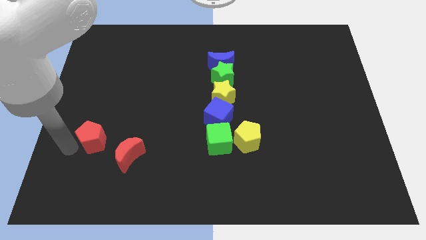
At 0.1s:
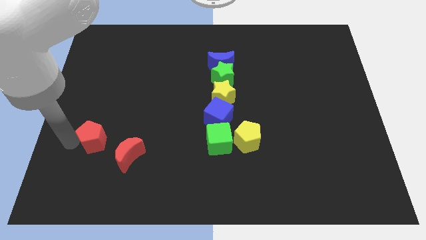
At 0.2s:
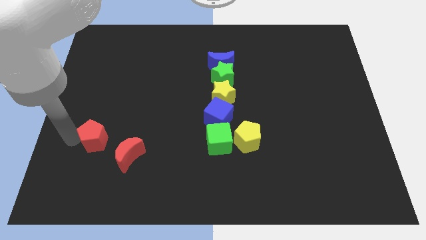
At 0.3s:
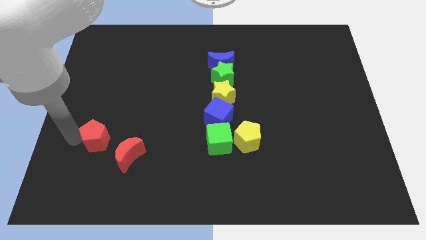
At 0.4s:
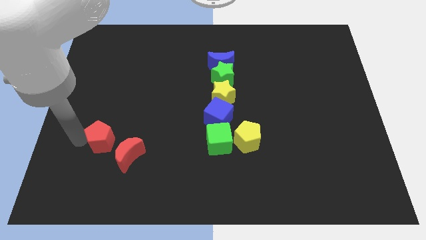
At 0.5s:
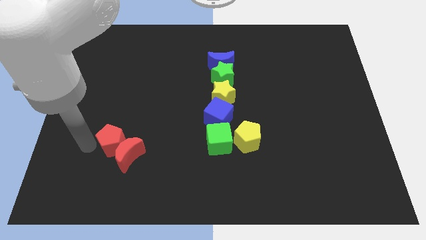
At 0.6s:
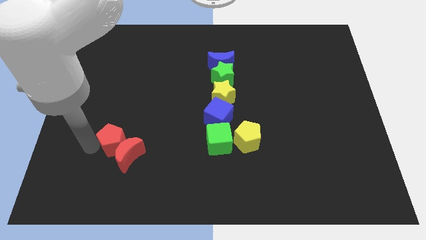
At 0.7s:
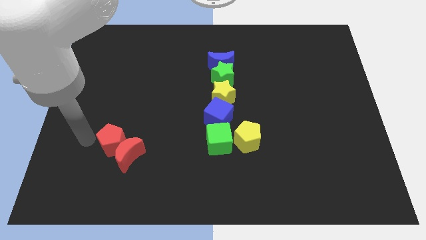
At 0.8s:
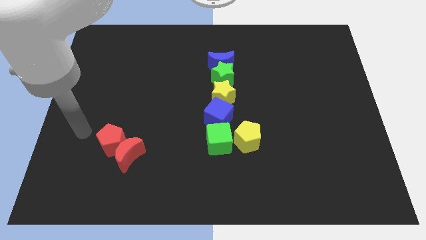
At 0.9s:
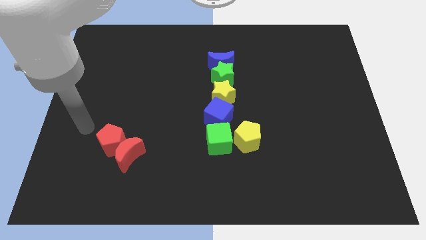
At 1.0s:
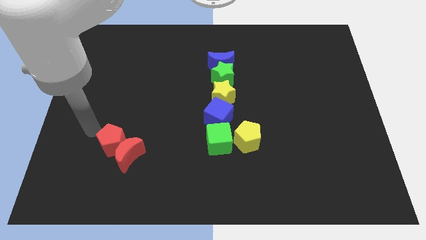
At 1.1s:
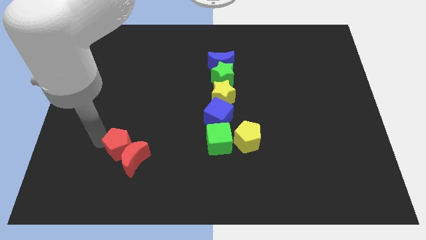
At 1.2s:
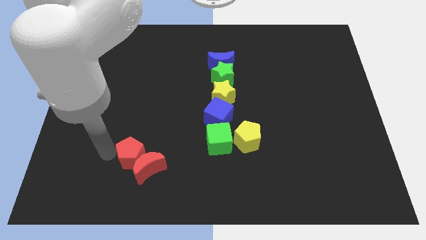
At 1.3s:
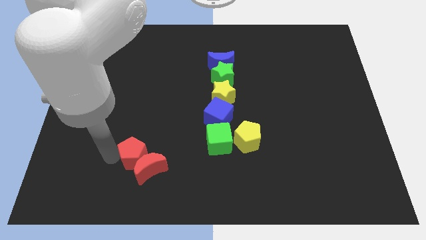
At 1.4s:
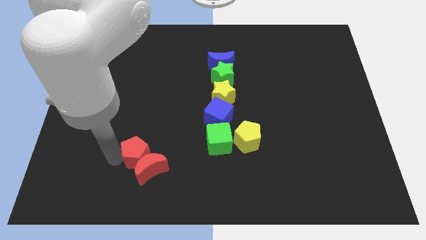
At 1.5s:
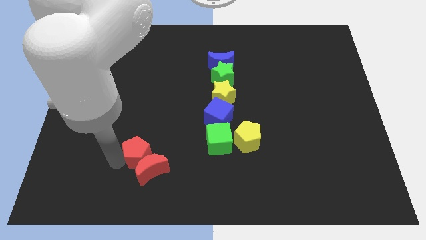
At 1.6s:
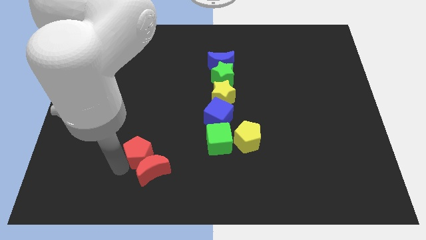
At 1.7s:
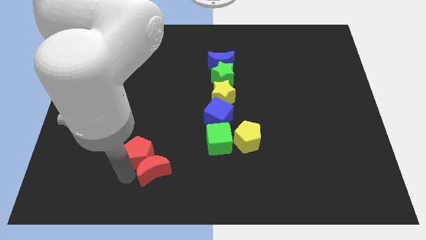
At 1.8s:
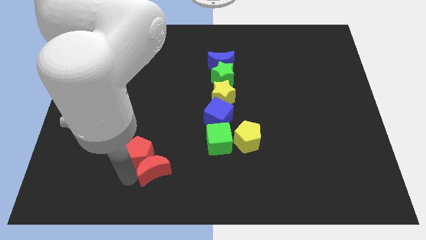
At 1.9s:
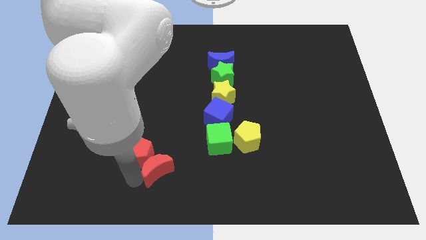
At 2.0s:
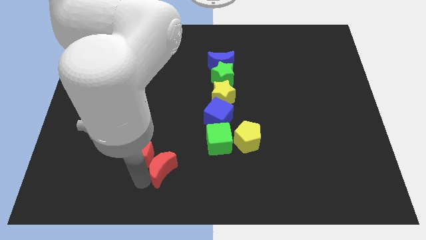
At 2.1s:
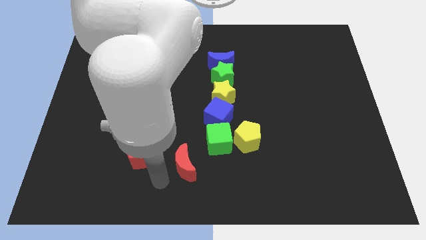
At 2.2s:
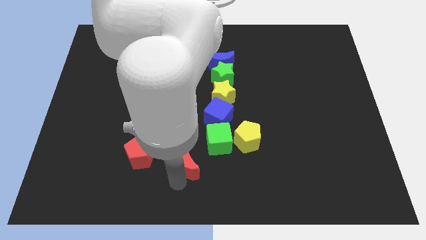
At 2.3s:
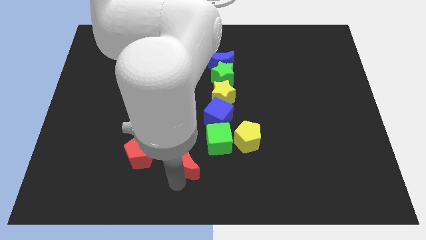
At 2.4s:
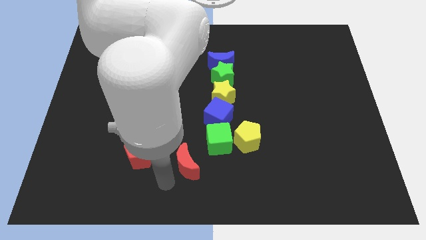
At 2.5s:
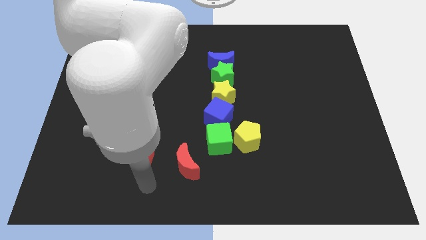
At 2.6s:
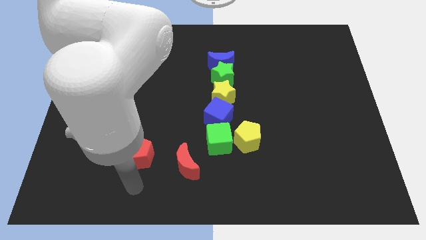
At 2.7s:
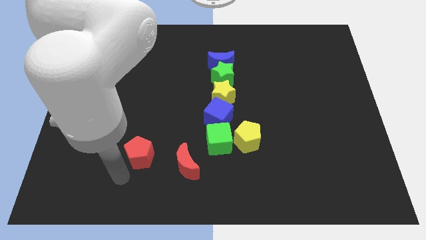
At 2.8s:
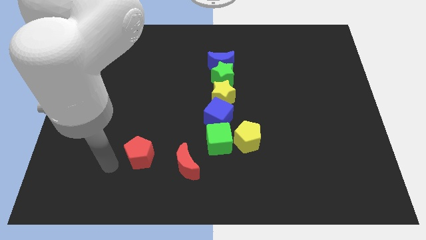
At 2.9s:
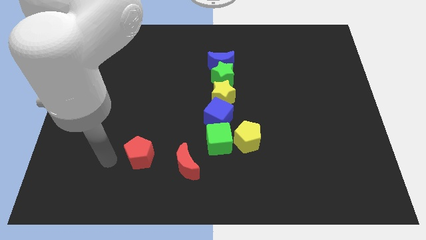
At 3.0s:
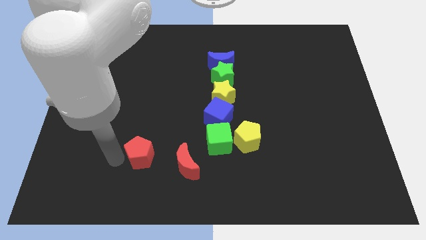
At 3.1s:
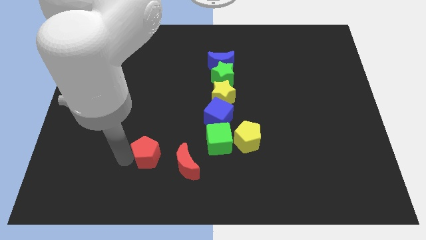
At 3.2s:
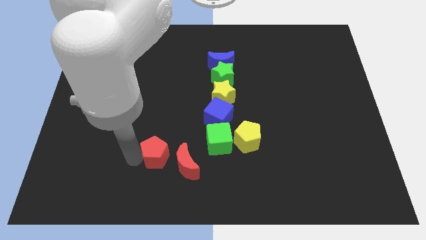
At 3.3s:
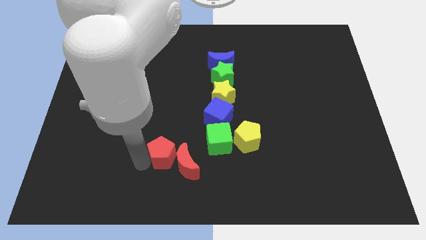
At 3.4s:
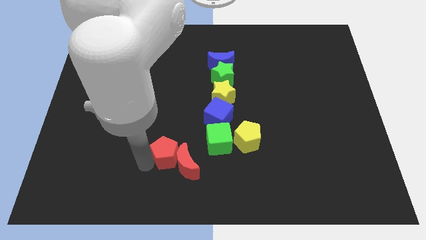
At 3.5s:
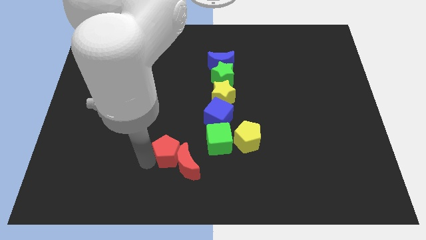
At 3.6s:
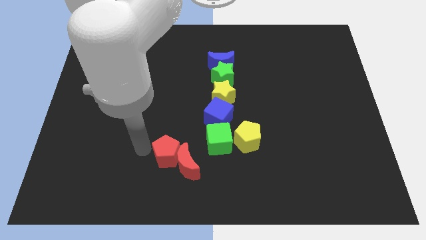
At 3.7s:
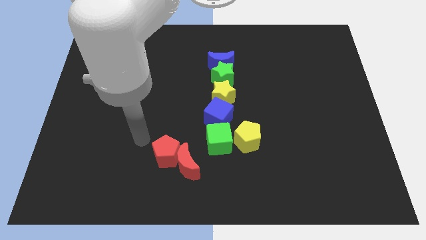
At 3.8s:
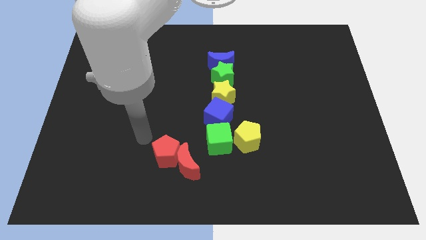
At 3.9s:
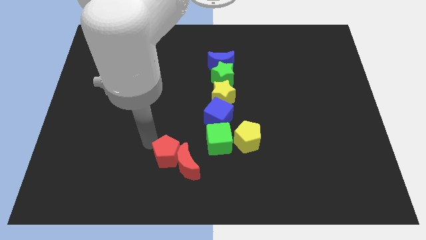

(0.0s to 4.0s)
push the red pentagon close to red crescent

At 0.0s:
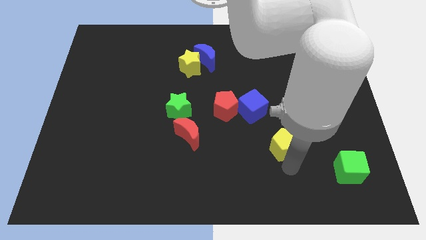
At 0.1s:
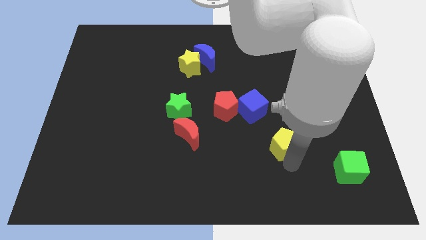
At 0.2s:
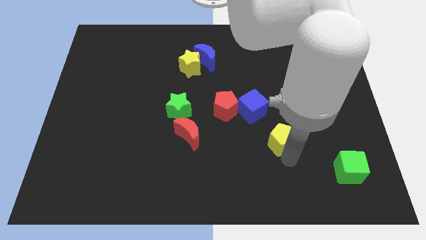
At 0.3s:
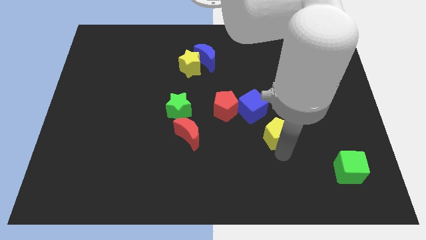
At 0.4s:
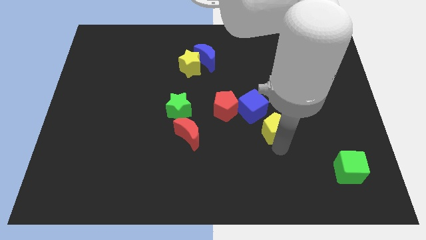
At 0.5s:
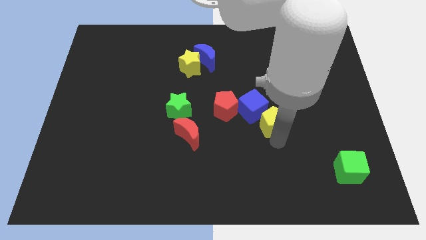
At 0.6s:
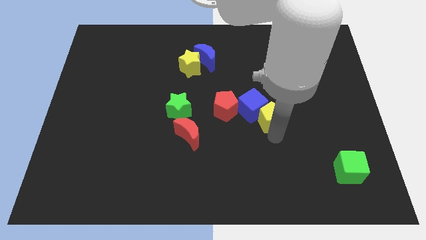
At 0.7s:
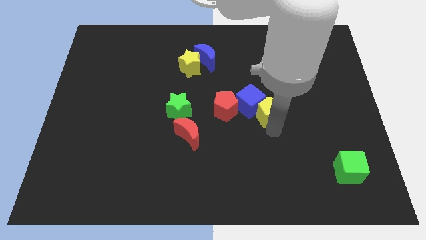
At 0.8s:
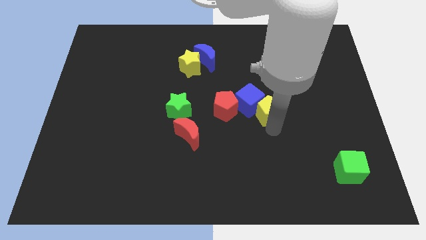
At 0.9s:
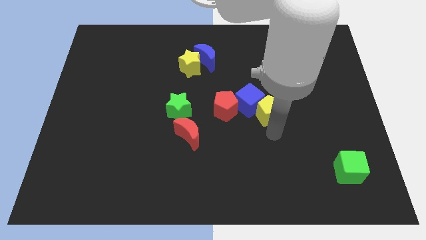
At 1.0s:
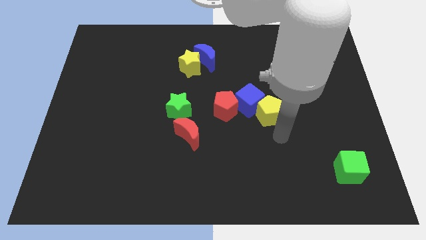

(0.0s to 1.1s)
push the blue cube with the blue cube

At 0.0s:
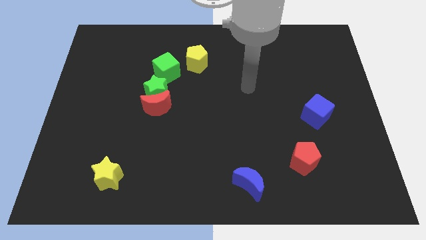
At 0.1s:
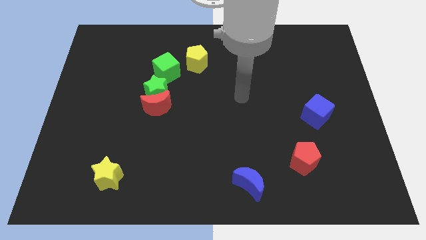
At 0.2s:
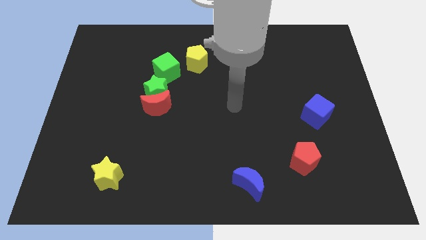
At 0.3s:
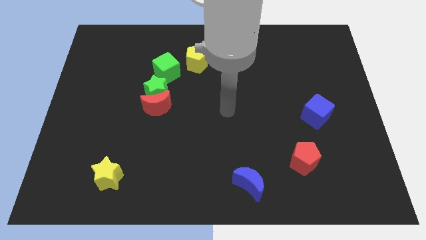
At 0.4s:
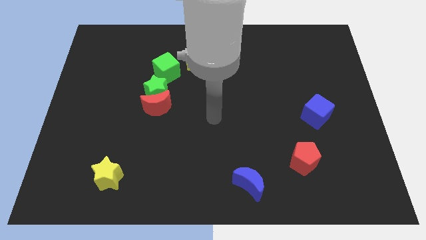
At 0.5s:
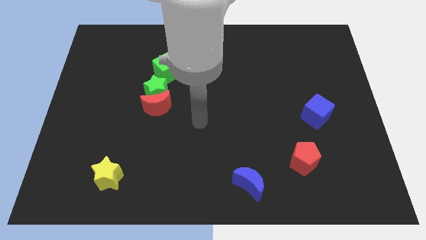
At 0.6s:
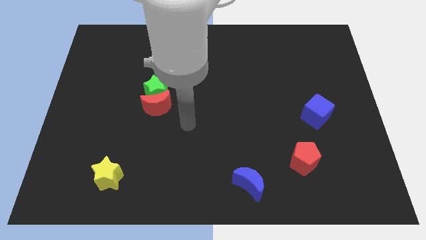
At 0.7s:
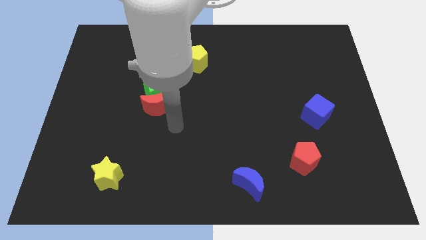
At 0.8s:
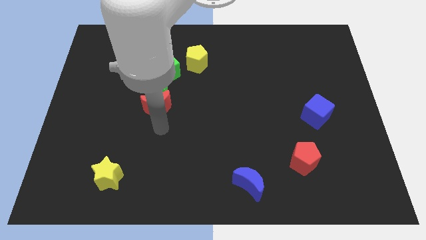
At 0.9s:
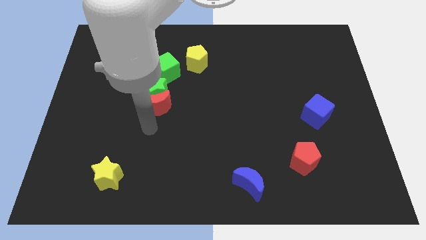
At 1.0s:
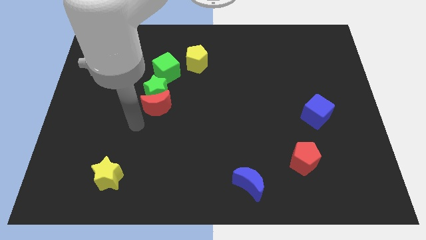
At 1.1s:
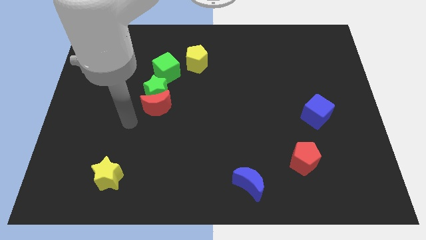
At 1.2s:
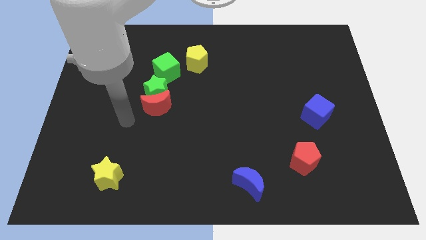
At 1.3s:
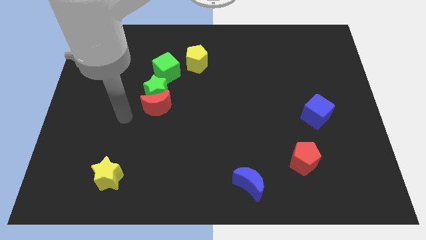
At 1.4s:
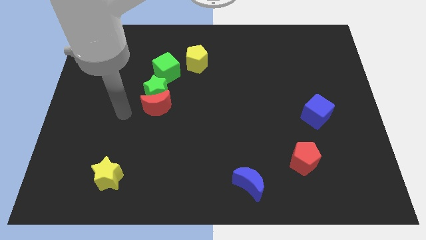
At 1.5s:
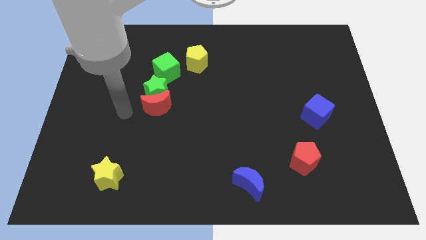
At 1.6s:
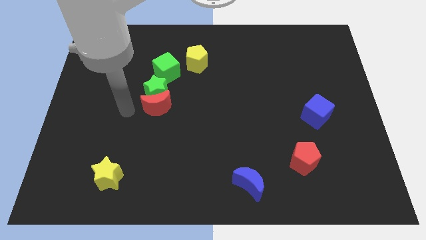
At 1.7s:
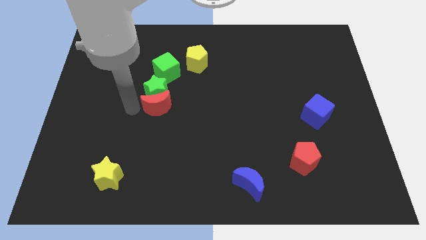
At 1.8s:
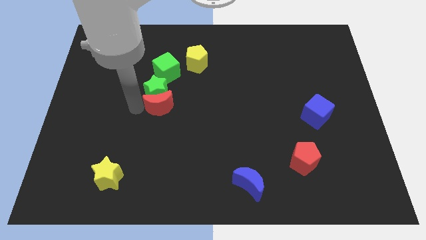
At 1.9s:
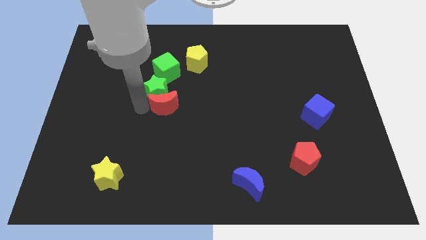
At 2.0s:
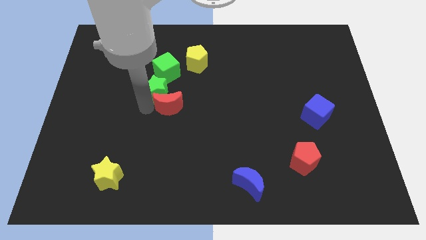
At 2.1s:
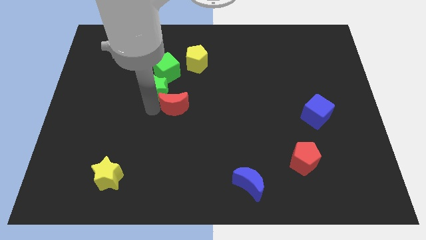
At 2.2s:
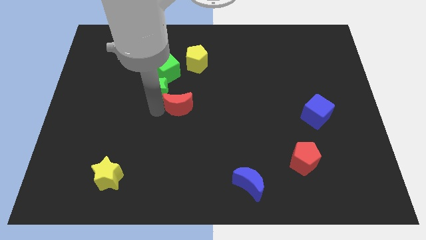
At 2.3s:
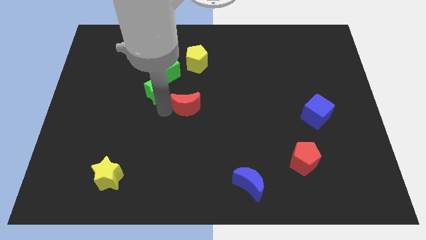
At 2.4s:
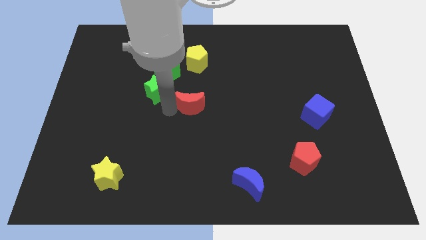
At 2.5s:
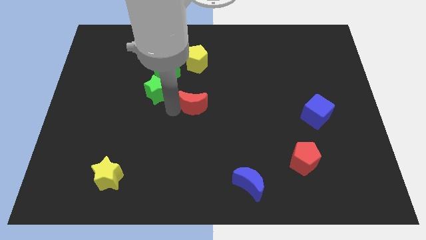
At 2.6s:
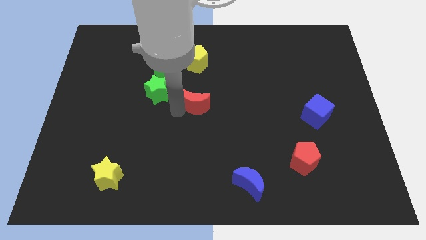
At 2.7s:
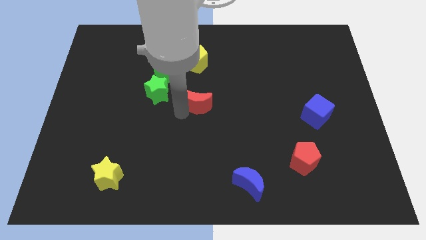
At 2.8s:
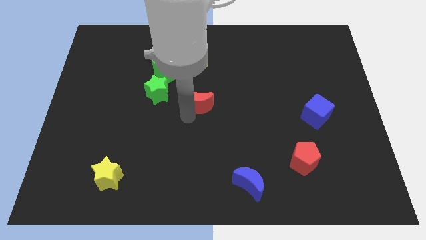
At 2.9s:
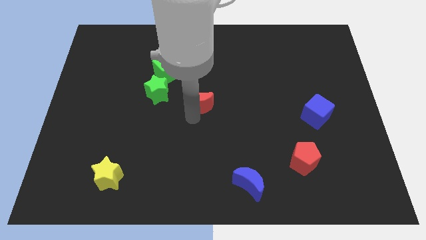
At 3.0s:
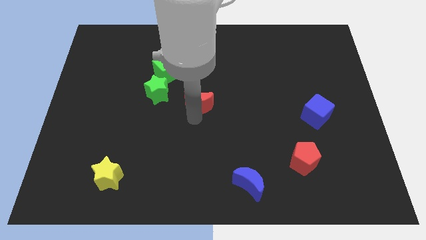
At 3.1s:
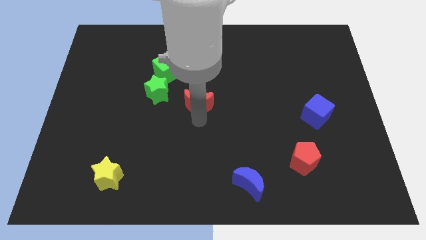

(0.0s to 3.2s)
push the red moon to the center of the board

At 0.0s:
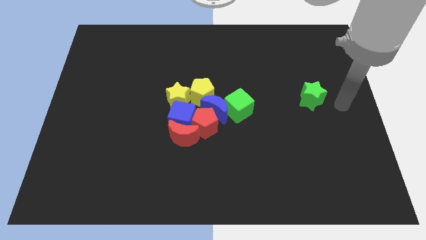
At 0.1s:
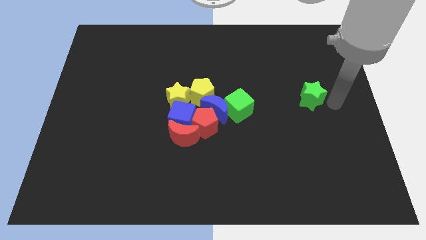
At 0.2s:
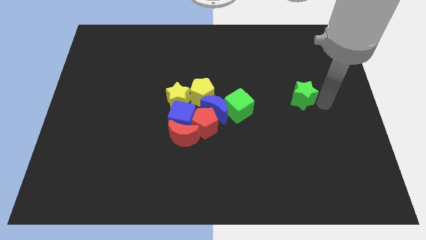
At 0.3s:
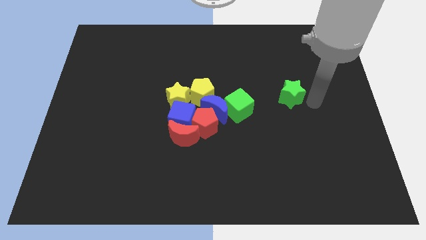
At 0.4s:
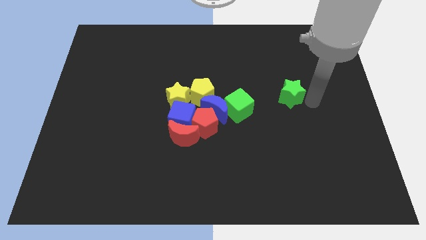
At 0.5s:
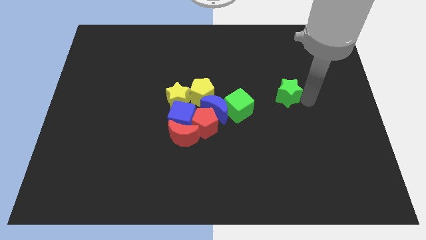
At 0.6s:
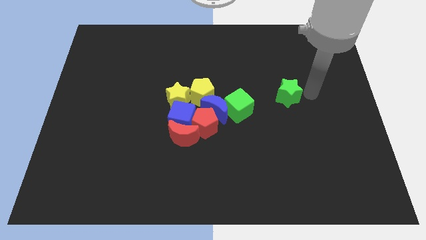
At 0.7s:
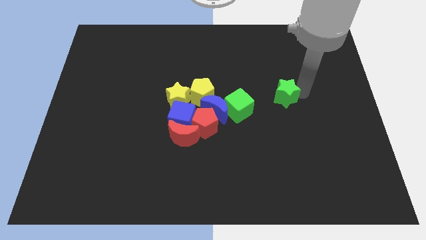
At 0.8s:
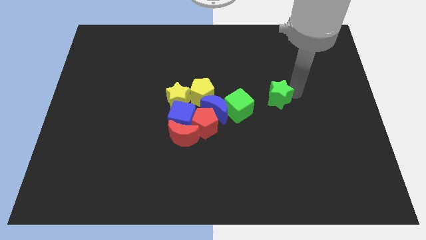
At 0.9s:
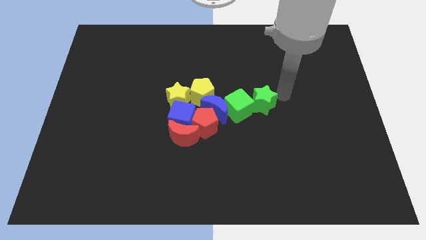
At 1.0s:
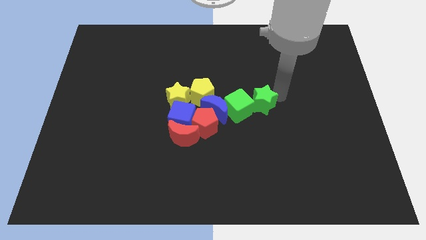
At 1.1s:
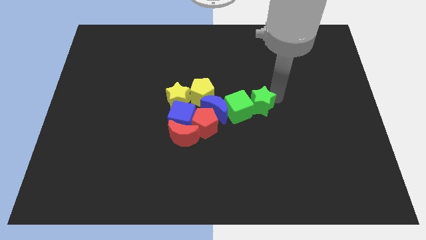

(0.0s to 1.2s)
push the green towards green cube
